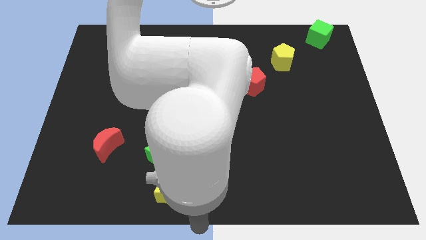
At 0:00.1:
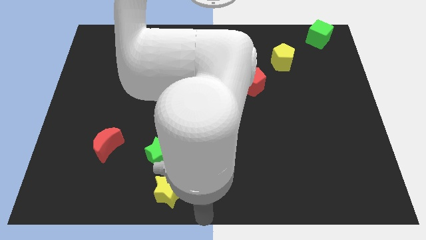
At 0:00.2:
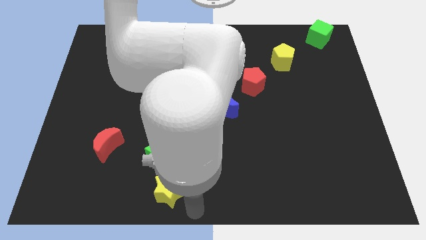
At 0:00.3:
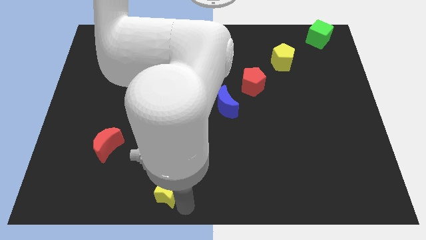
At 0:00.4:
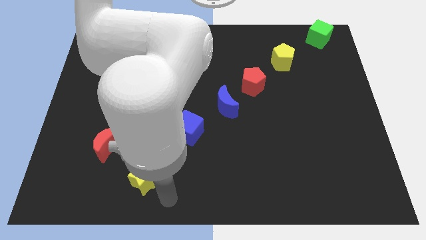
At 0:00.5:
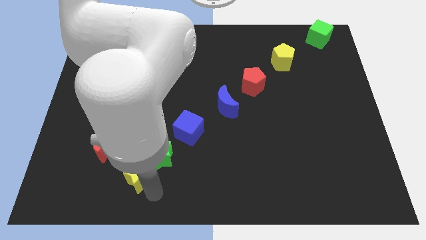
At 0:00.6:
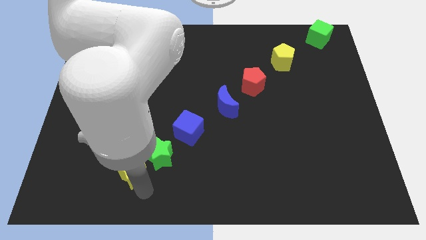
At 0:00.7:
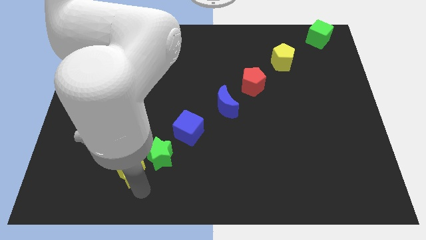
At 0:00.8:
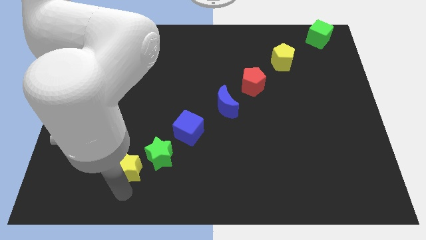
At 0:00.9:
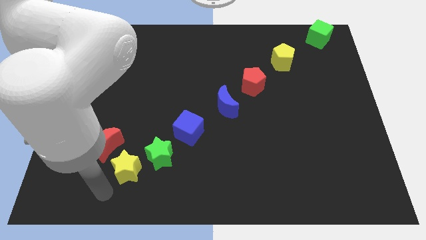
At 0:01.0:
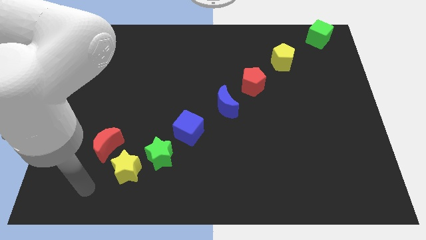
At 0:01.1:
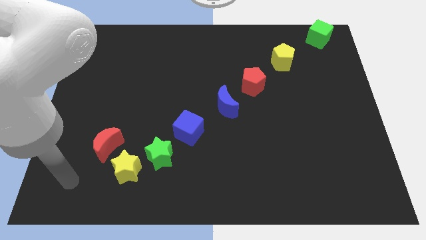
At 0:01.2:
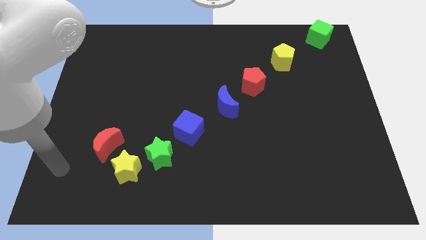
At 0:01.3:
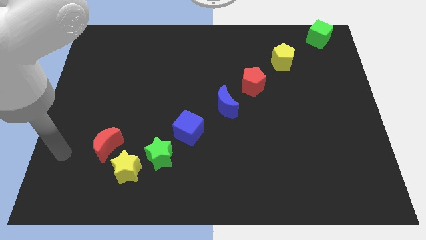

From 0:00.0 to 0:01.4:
place yellow star to the left of green star

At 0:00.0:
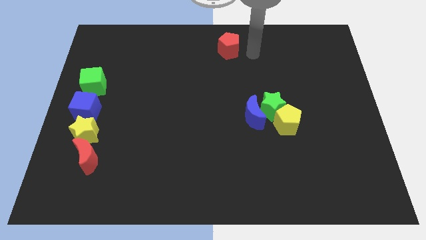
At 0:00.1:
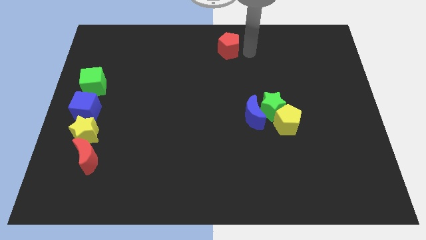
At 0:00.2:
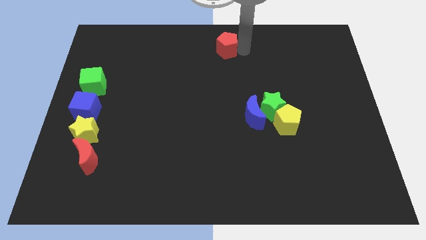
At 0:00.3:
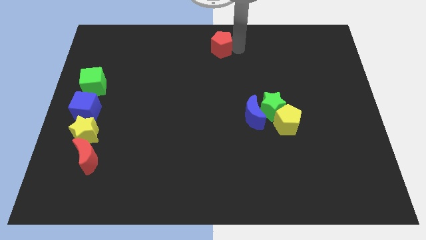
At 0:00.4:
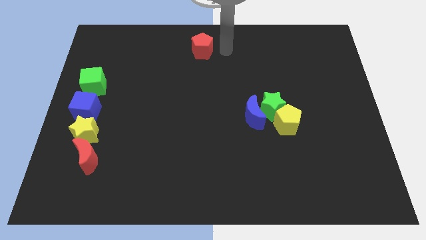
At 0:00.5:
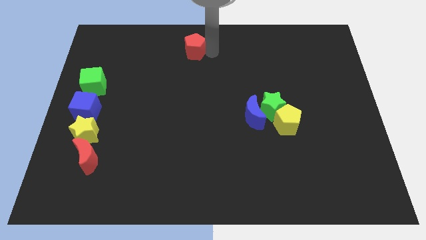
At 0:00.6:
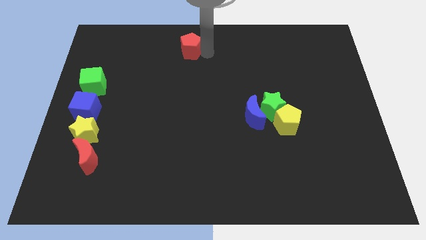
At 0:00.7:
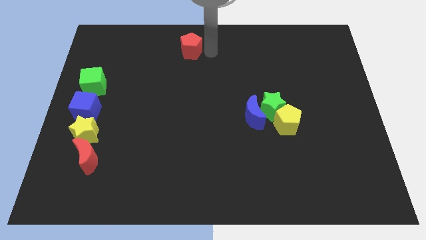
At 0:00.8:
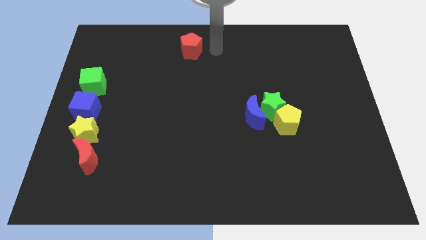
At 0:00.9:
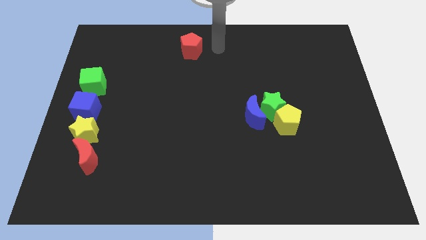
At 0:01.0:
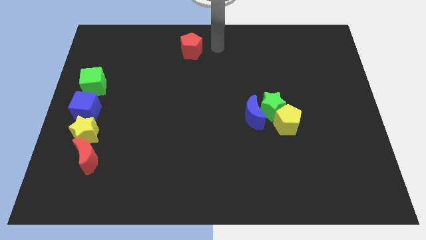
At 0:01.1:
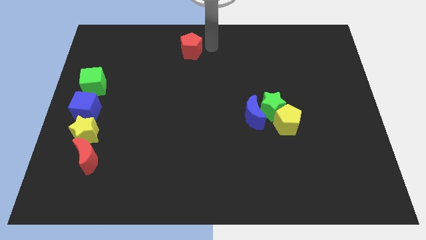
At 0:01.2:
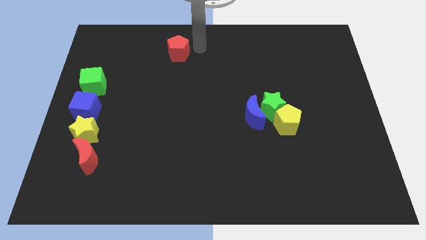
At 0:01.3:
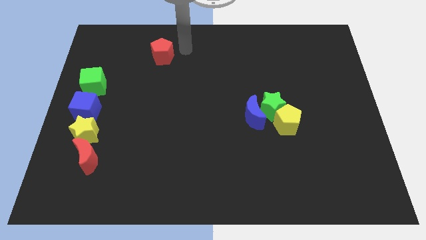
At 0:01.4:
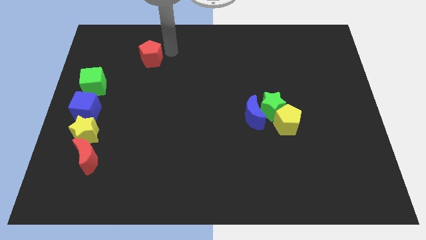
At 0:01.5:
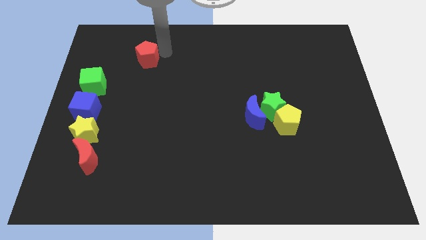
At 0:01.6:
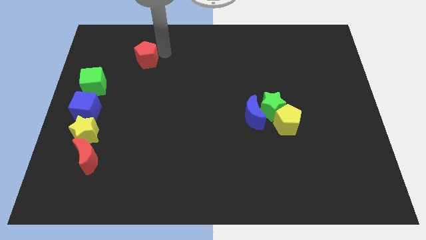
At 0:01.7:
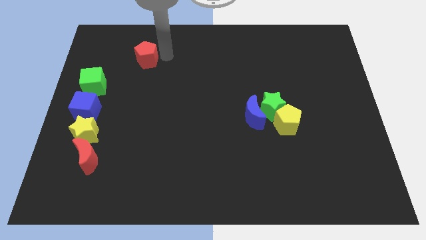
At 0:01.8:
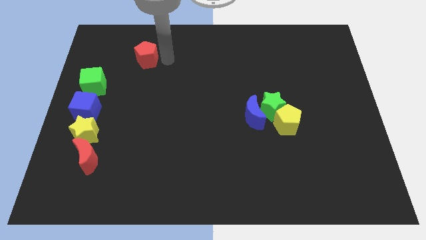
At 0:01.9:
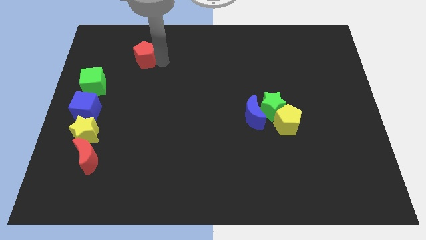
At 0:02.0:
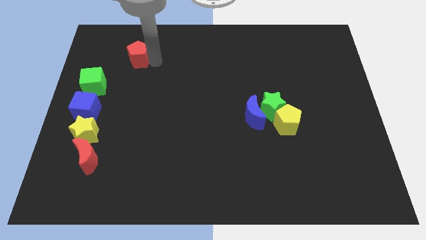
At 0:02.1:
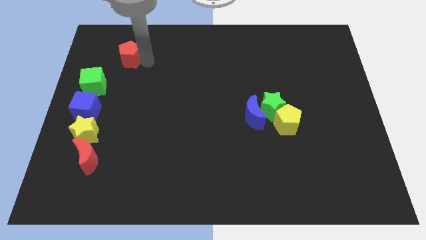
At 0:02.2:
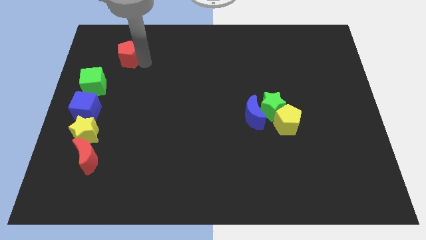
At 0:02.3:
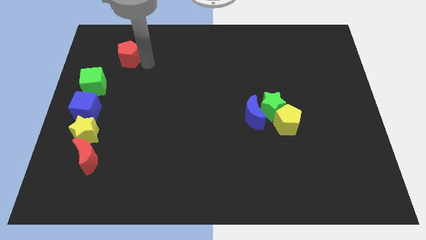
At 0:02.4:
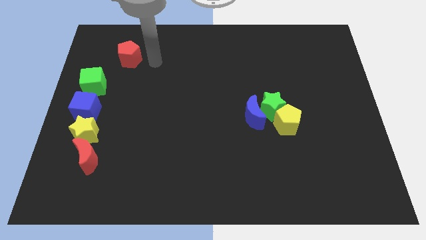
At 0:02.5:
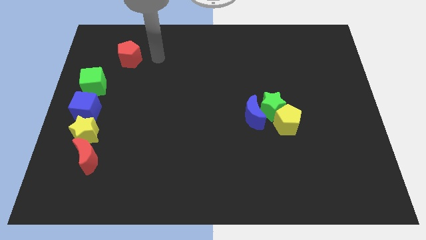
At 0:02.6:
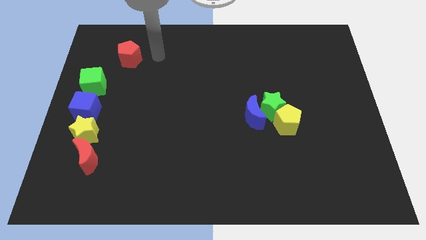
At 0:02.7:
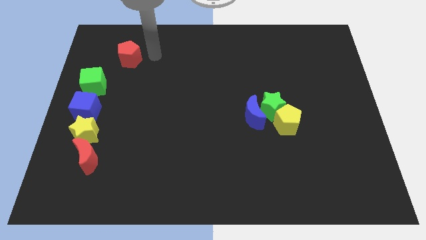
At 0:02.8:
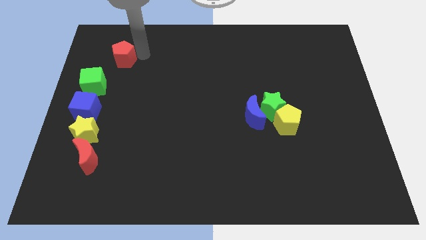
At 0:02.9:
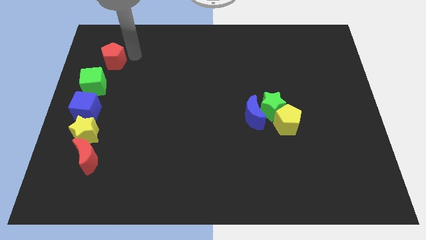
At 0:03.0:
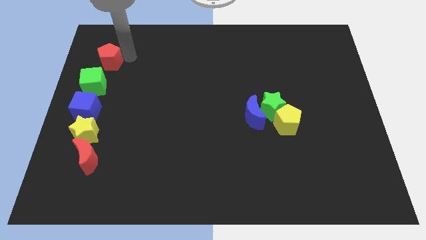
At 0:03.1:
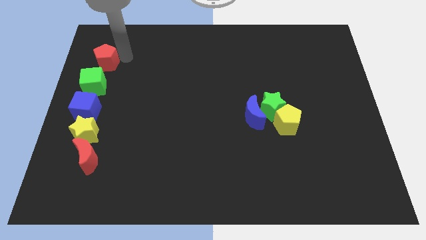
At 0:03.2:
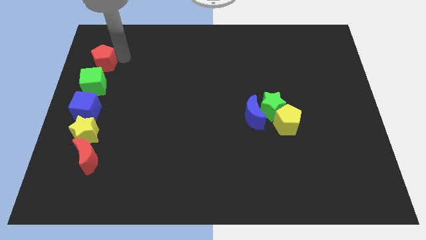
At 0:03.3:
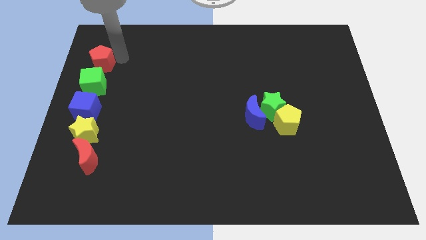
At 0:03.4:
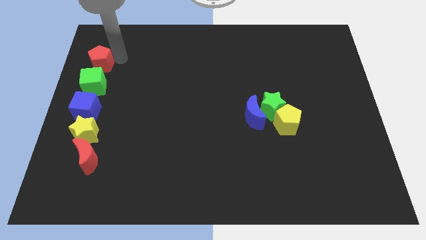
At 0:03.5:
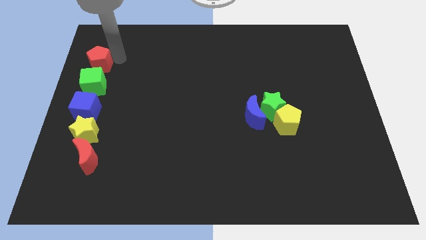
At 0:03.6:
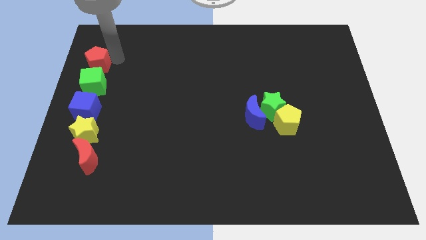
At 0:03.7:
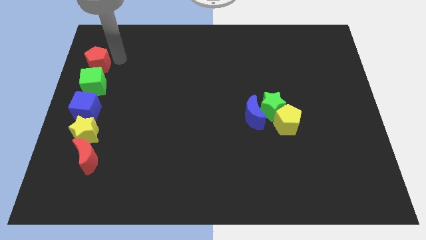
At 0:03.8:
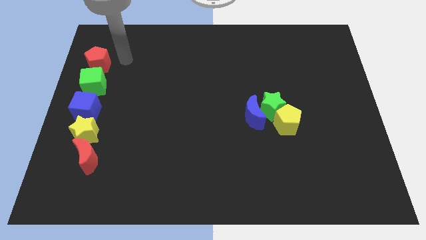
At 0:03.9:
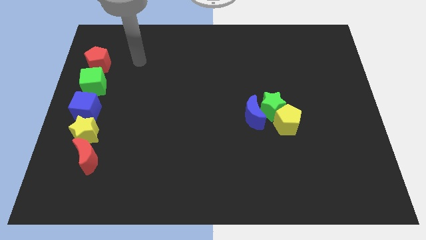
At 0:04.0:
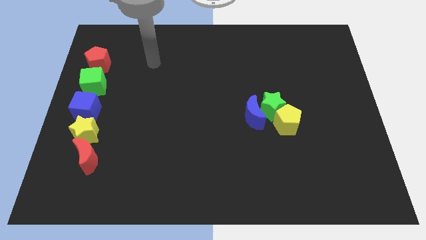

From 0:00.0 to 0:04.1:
place the red pentagon on top of the green cube

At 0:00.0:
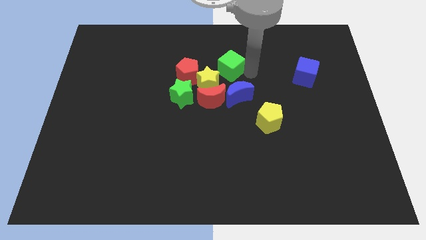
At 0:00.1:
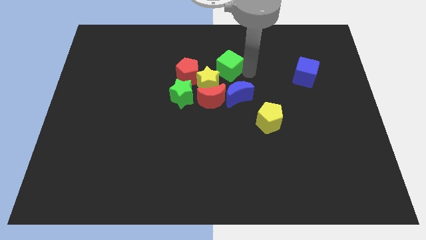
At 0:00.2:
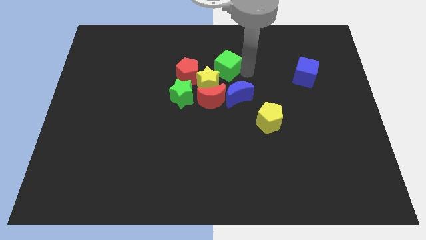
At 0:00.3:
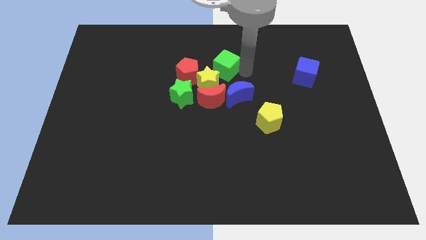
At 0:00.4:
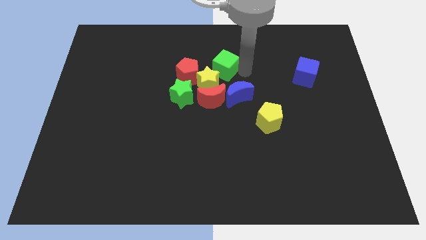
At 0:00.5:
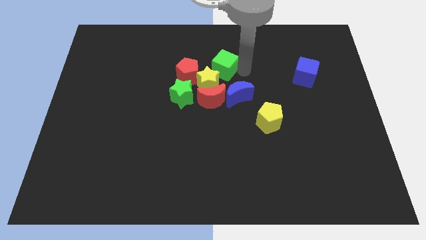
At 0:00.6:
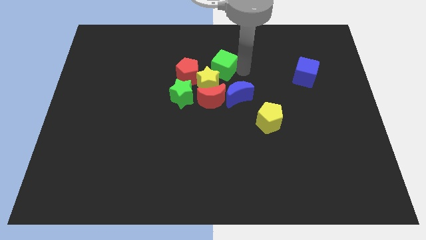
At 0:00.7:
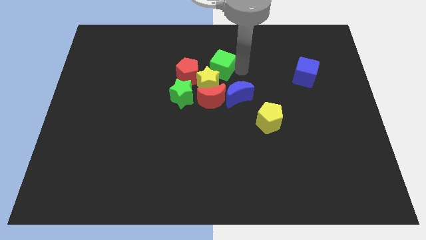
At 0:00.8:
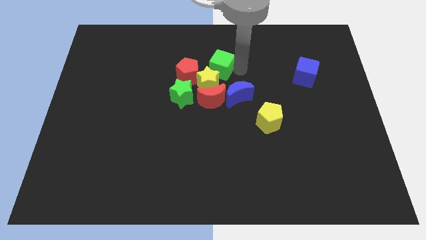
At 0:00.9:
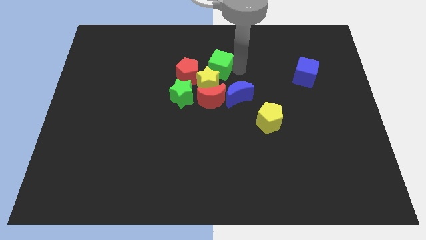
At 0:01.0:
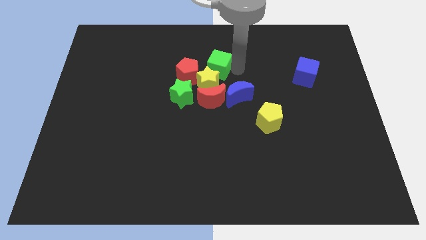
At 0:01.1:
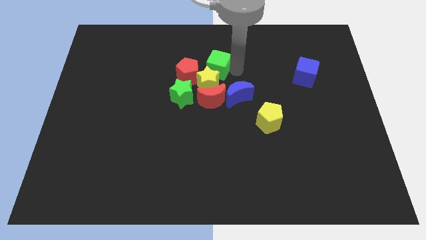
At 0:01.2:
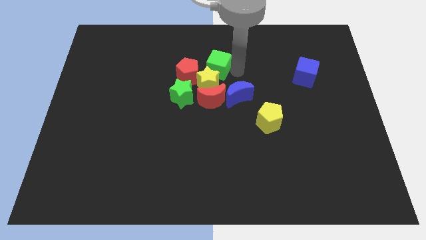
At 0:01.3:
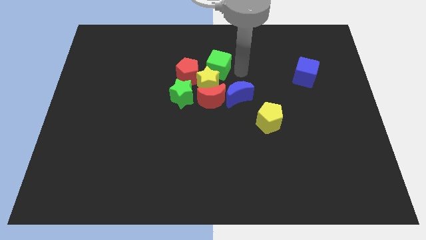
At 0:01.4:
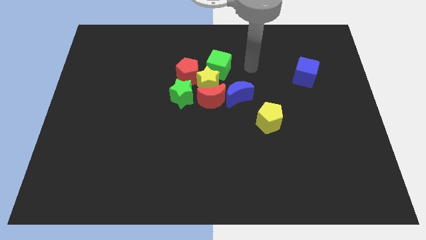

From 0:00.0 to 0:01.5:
place the green cube close to the top right to the yellow star

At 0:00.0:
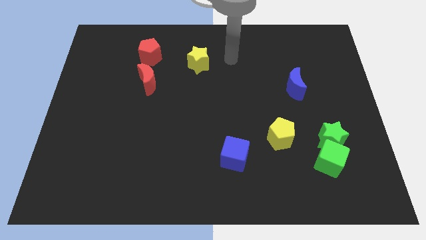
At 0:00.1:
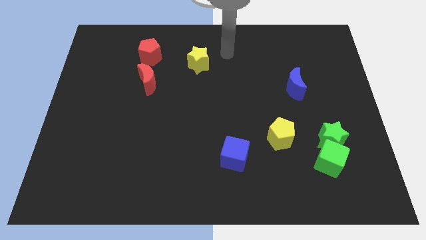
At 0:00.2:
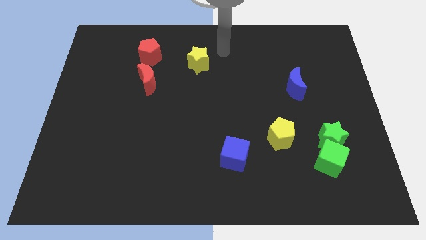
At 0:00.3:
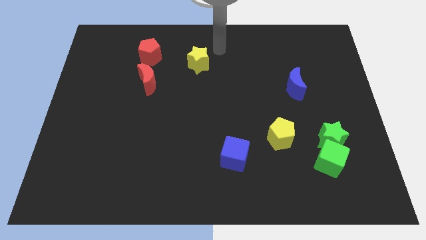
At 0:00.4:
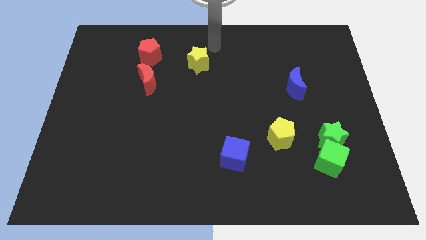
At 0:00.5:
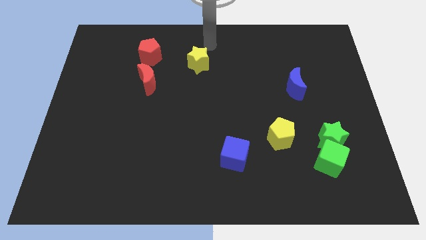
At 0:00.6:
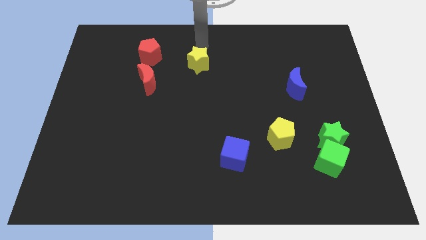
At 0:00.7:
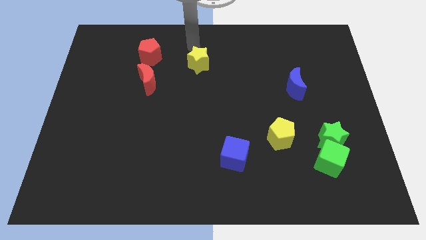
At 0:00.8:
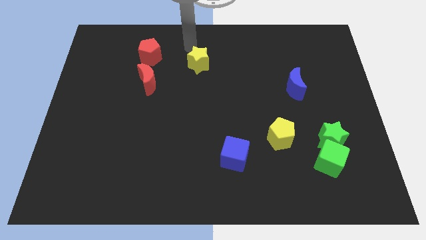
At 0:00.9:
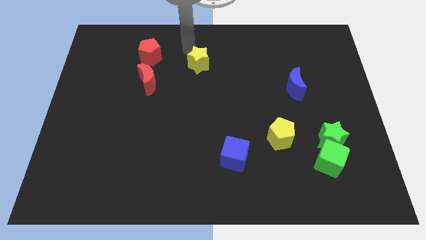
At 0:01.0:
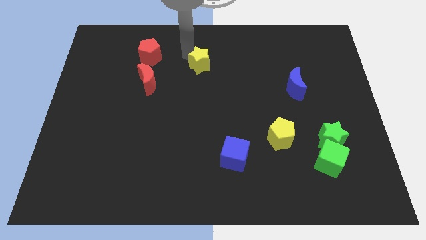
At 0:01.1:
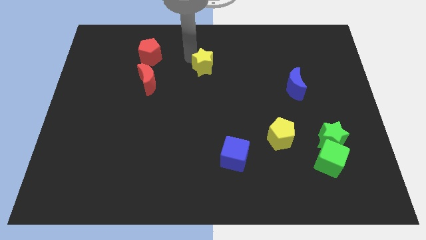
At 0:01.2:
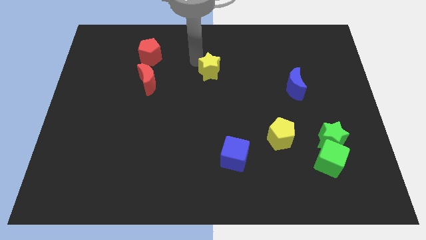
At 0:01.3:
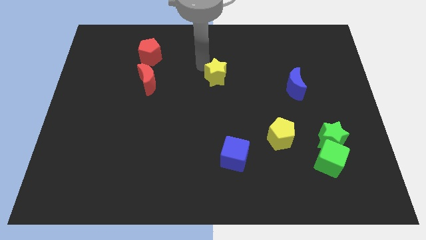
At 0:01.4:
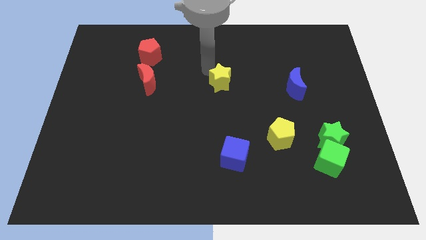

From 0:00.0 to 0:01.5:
push the yellow star to the center of the board

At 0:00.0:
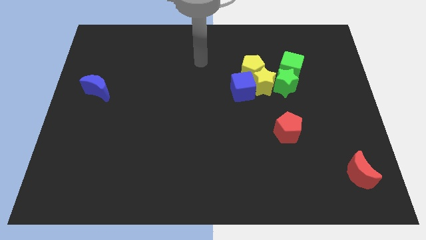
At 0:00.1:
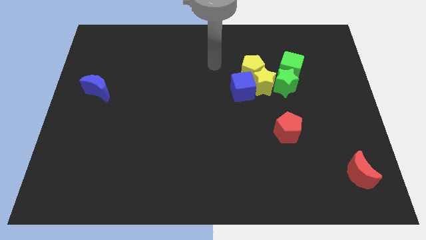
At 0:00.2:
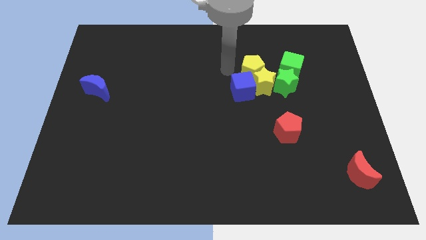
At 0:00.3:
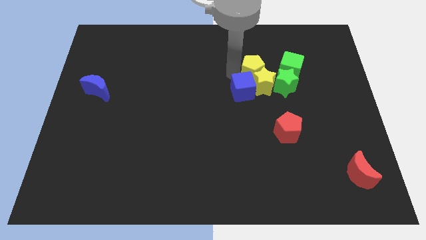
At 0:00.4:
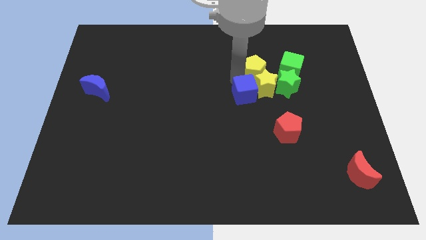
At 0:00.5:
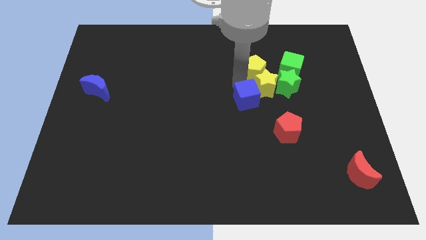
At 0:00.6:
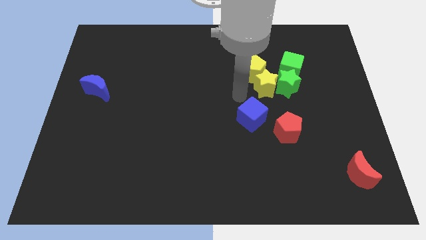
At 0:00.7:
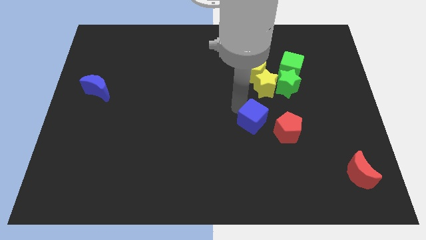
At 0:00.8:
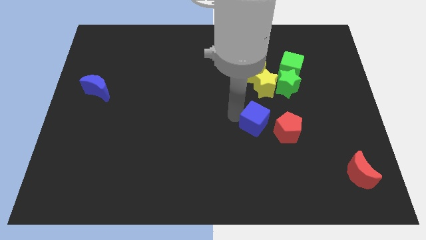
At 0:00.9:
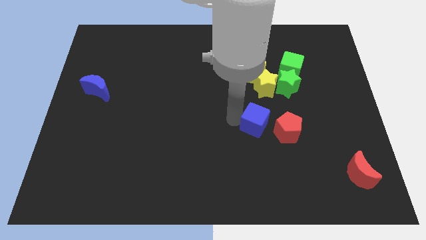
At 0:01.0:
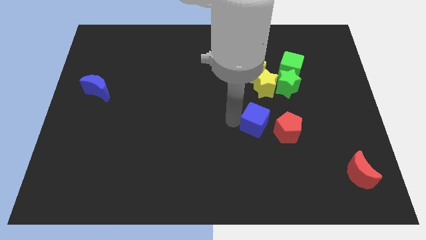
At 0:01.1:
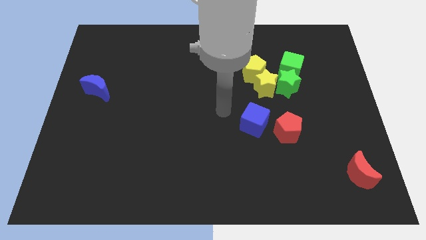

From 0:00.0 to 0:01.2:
place blue cube to the left of red pentagon
